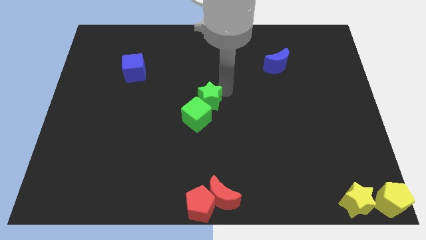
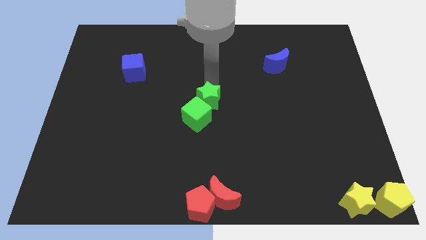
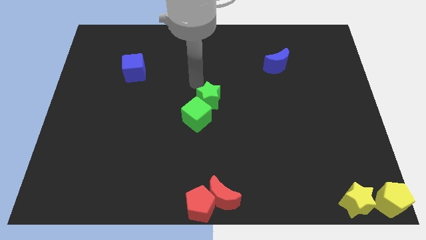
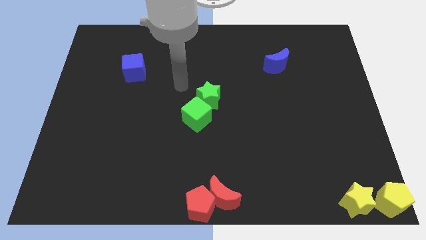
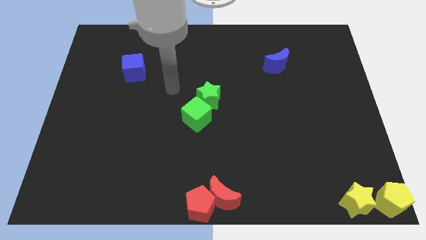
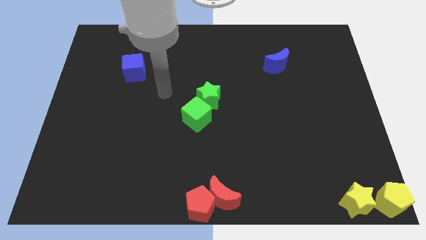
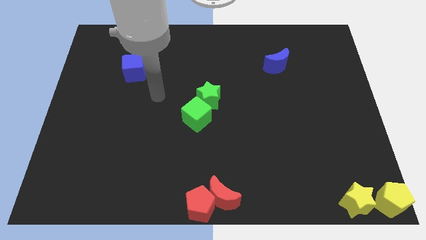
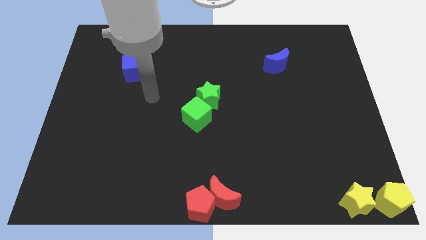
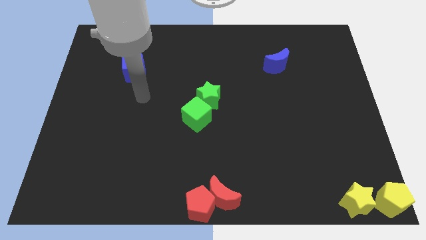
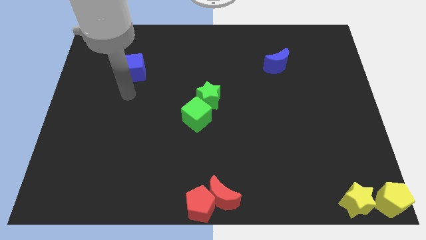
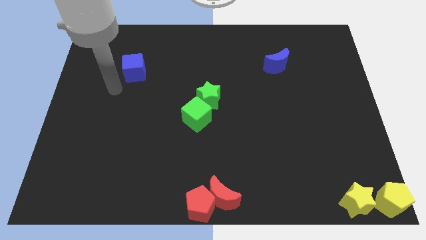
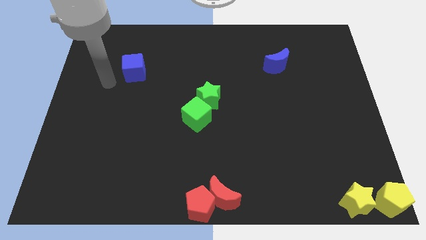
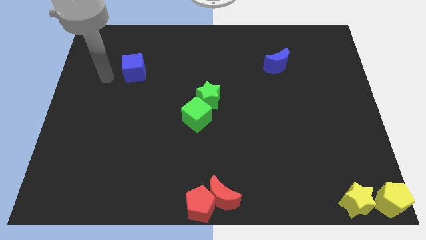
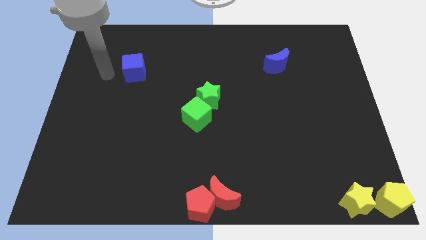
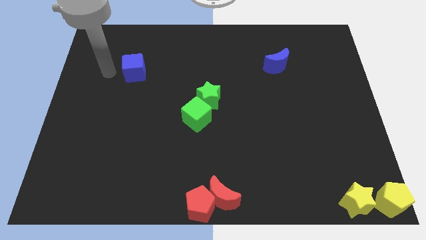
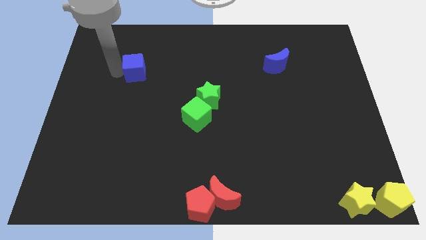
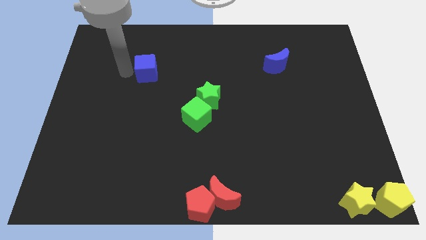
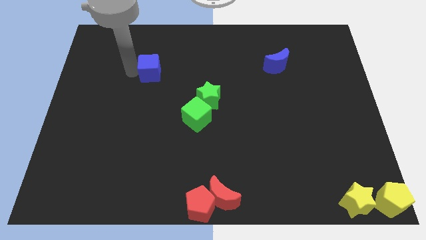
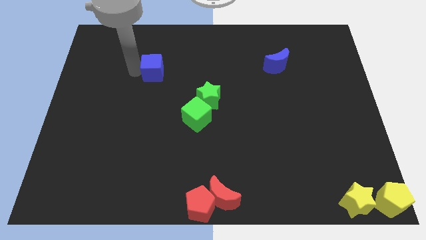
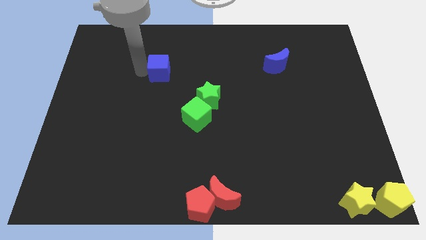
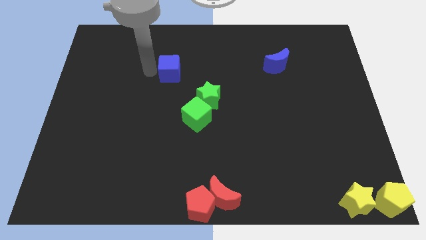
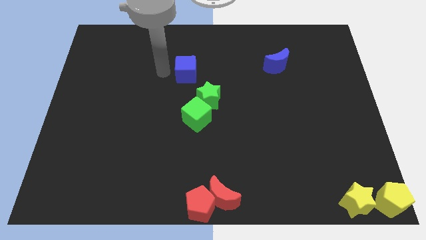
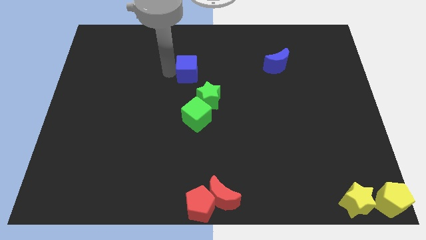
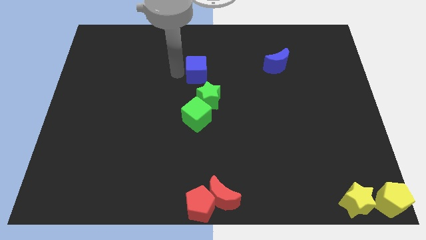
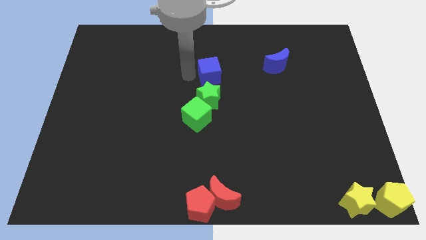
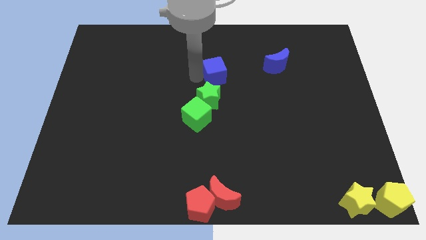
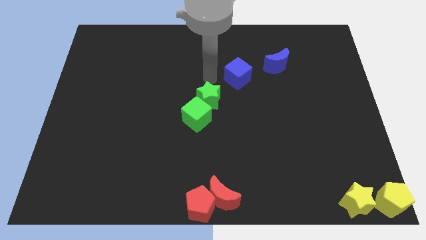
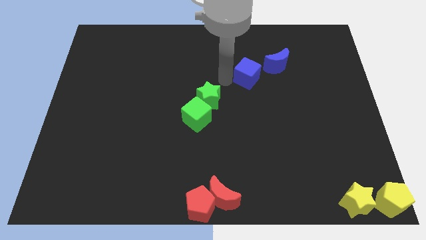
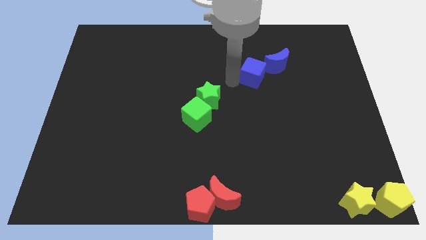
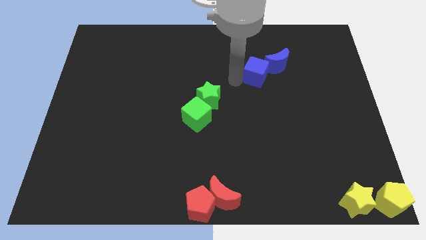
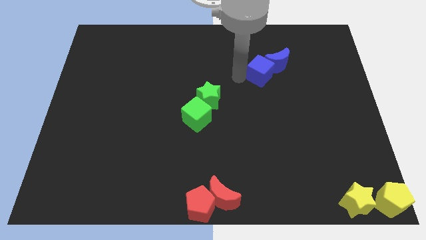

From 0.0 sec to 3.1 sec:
place the blue cube diagonally top right of the green star

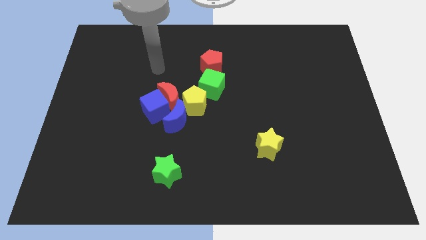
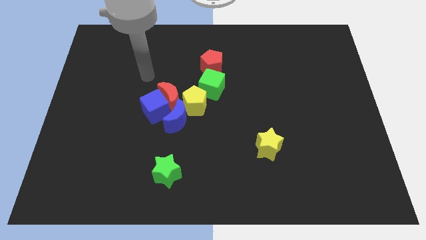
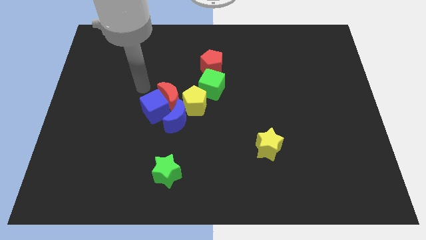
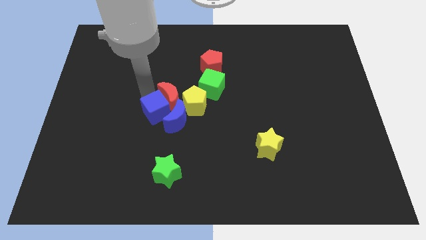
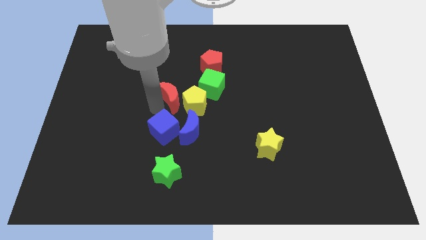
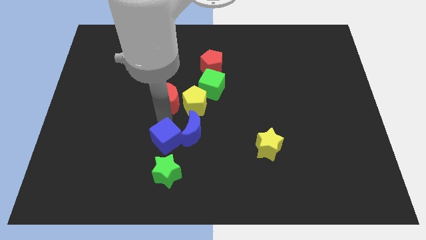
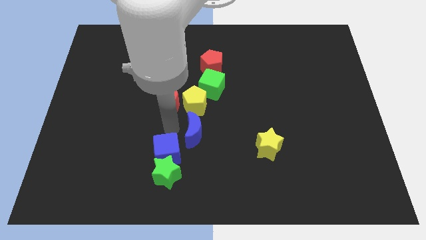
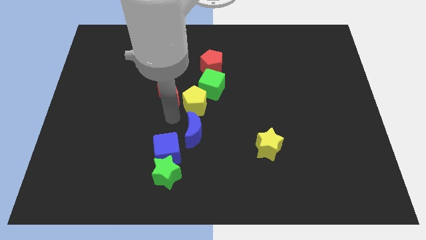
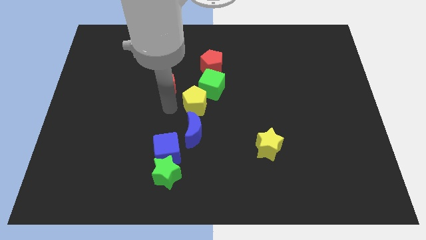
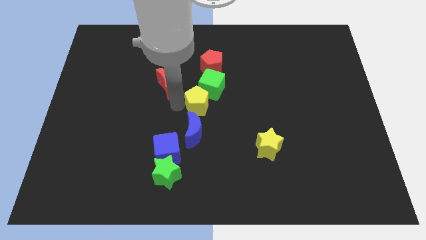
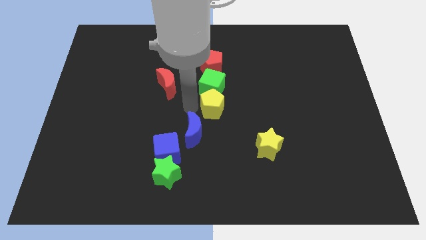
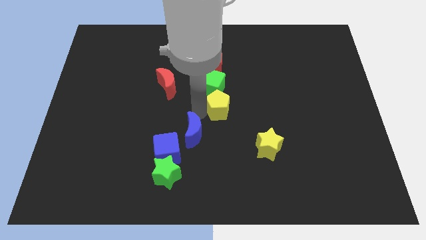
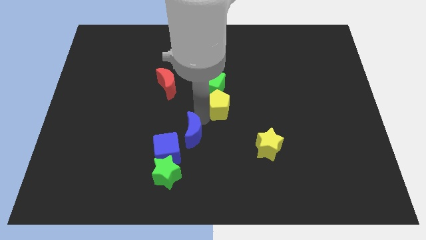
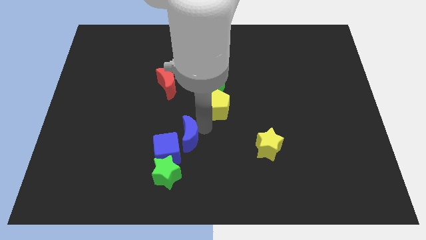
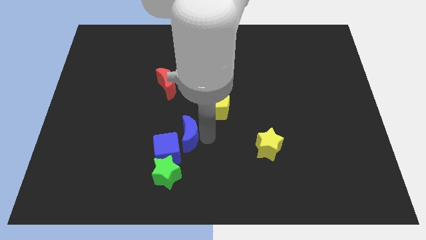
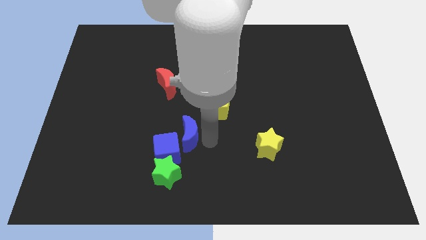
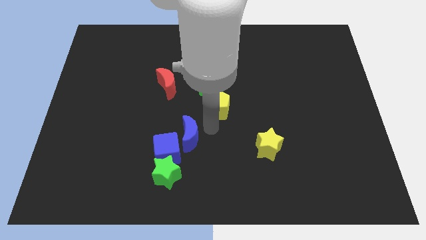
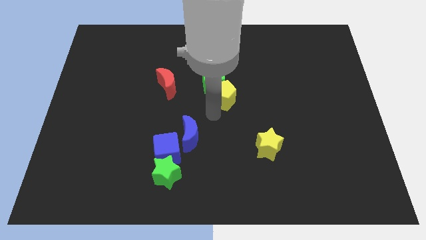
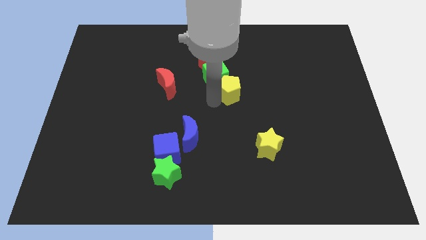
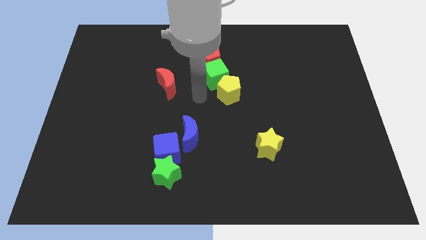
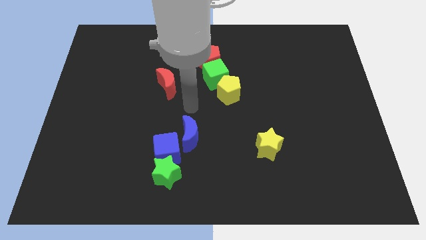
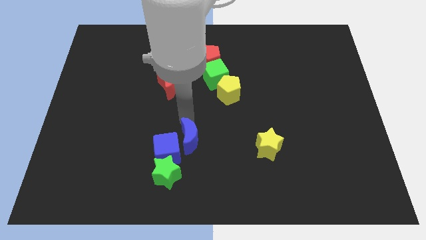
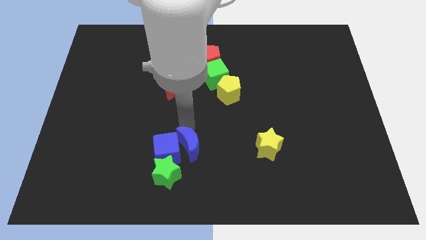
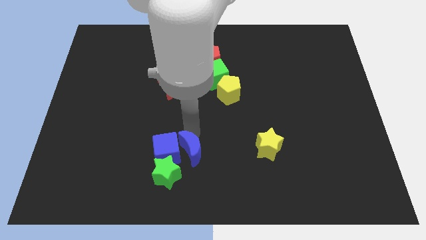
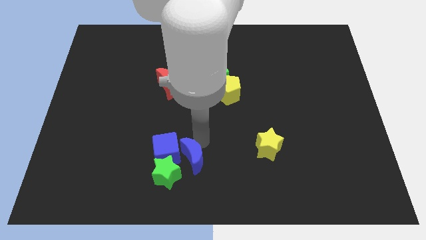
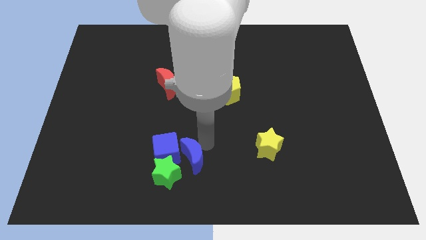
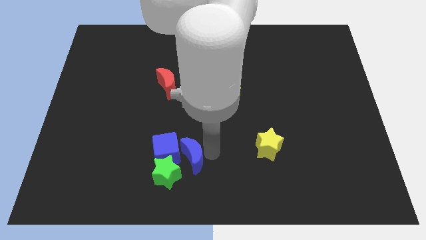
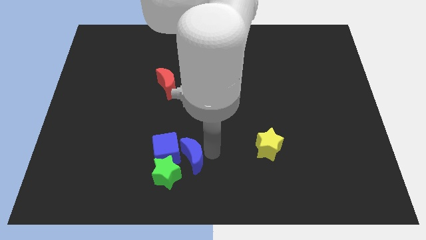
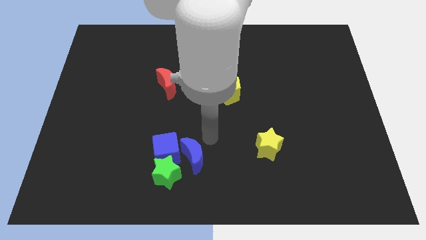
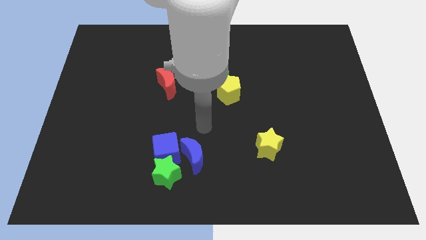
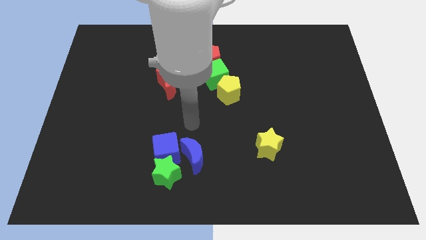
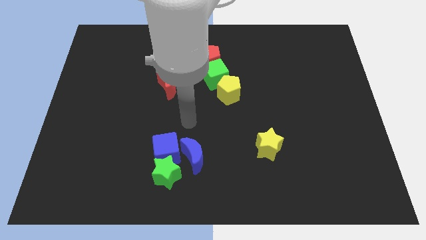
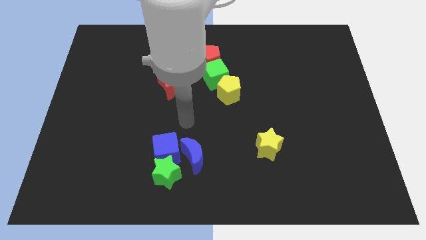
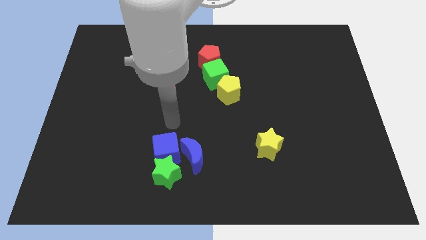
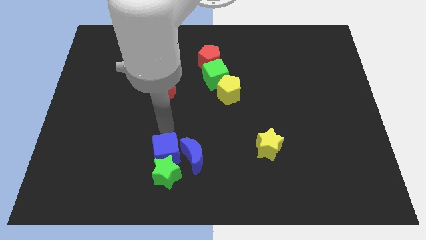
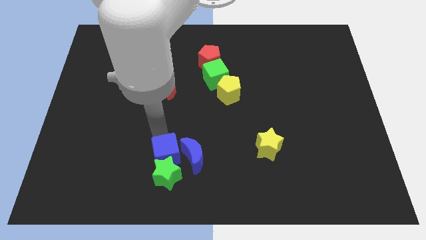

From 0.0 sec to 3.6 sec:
push the blue blocks towards bottom

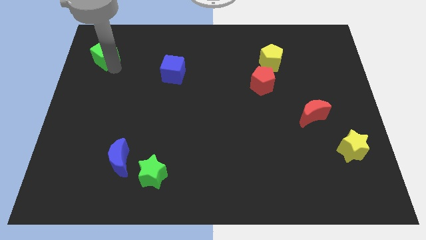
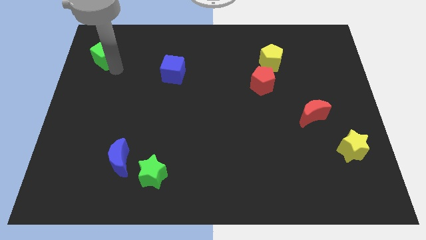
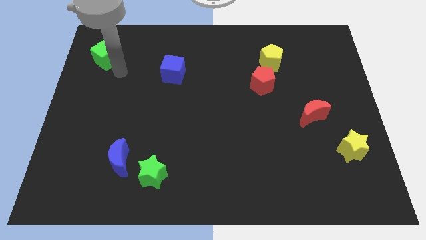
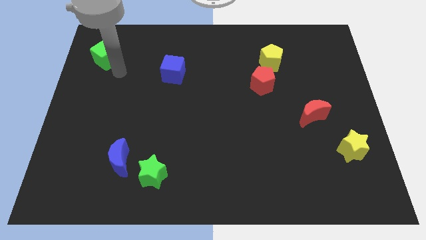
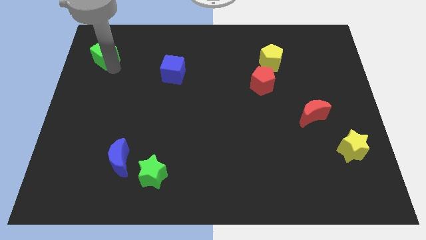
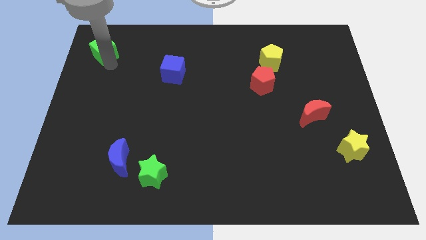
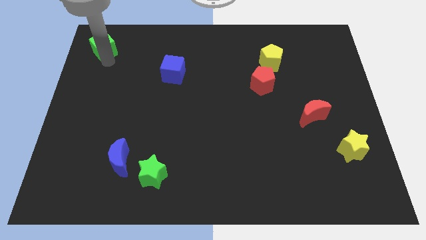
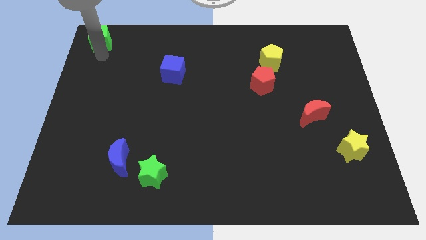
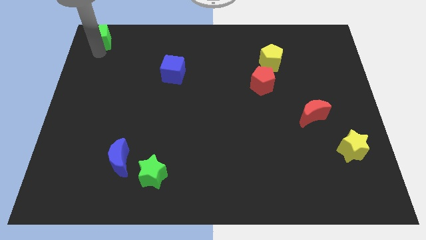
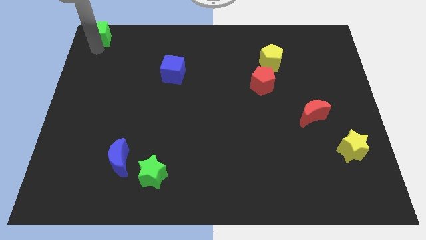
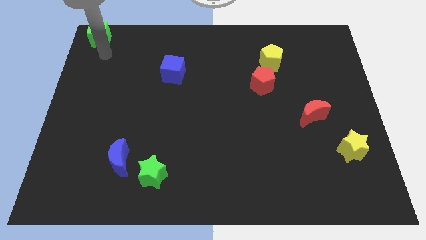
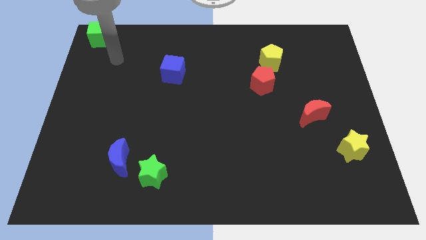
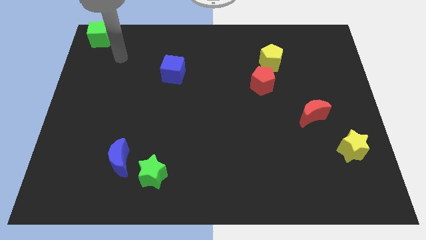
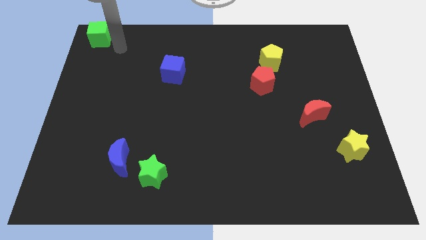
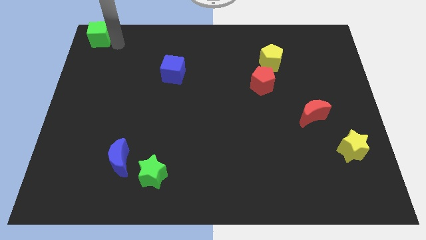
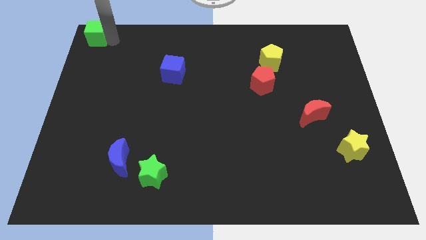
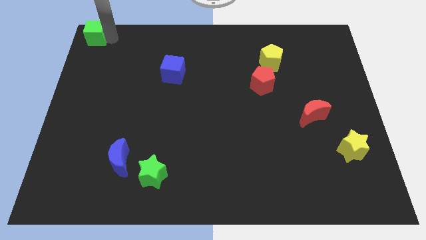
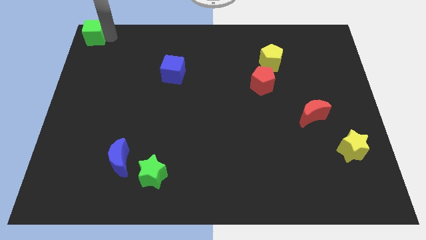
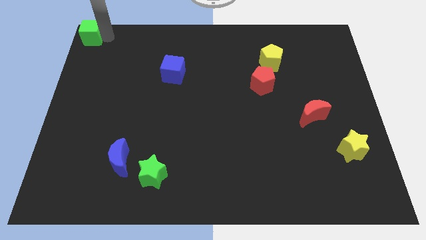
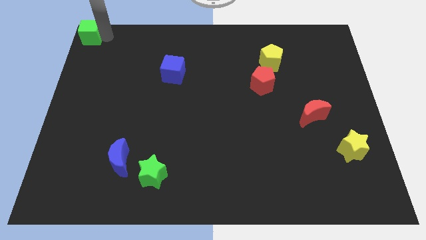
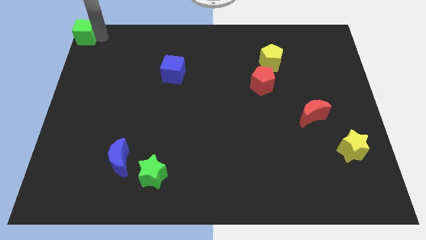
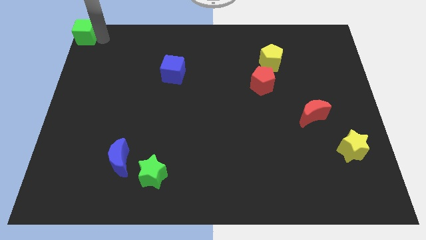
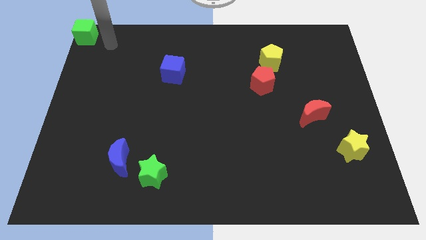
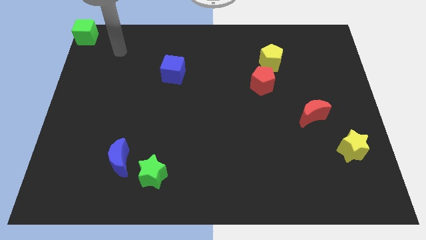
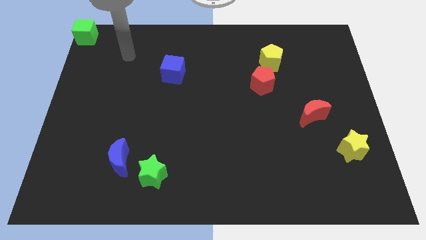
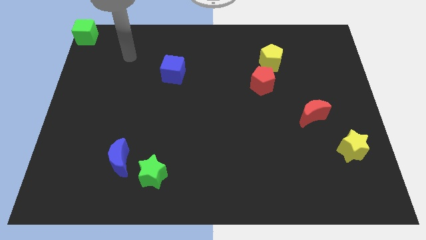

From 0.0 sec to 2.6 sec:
place the green cube at the top left corner
